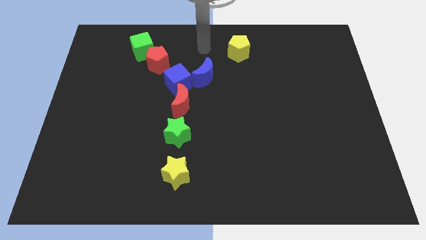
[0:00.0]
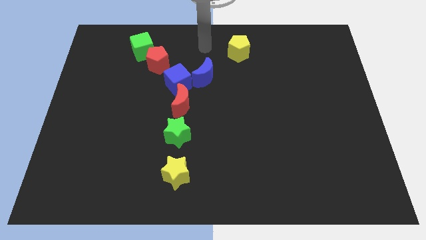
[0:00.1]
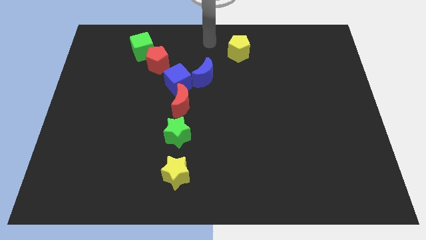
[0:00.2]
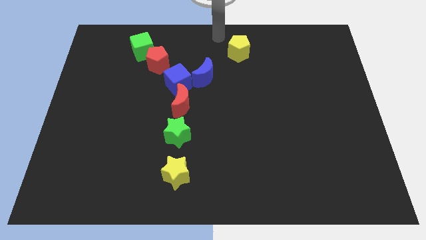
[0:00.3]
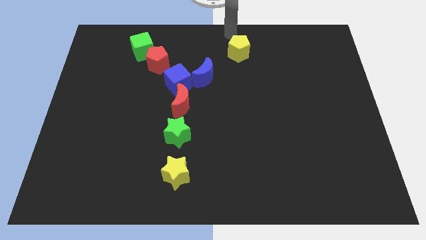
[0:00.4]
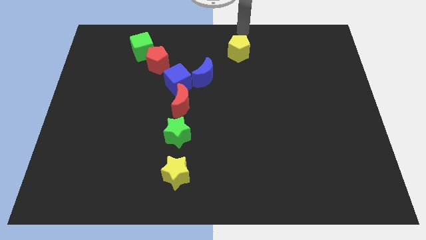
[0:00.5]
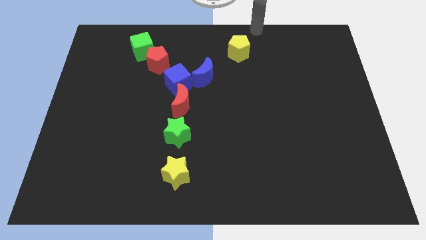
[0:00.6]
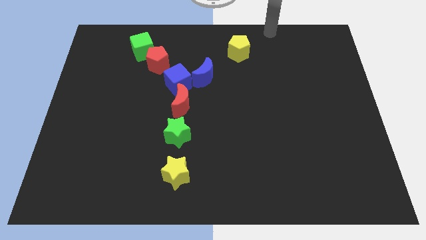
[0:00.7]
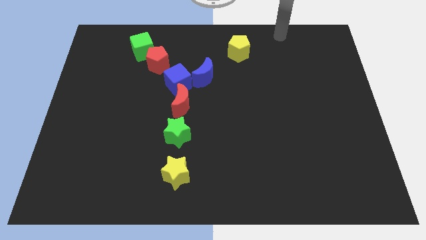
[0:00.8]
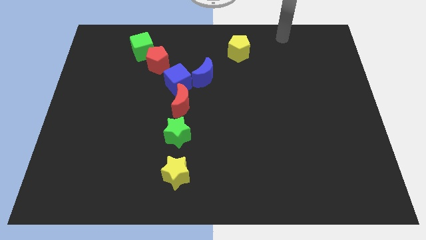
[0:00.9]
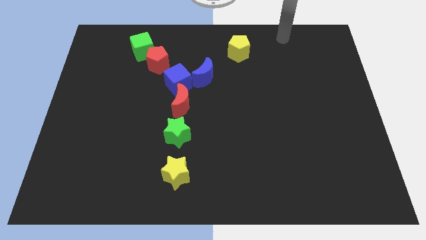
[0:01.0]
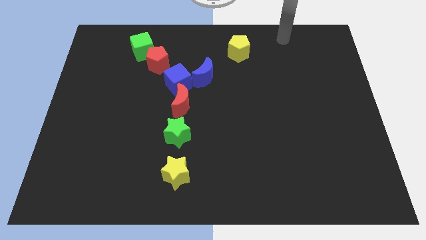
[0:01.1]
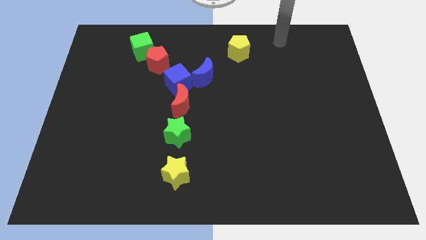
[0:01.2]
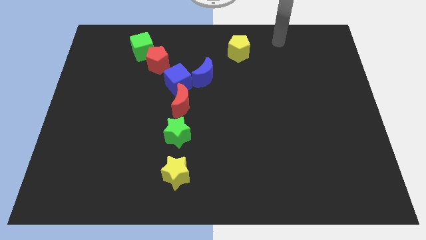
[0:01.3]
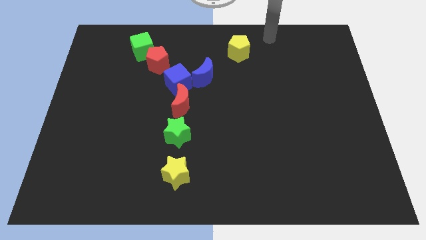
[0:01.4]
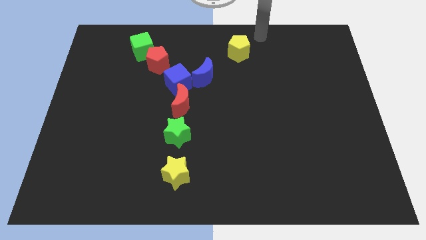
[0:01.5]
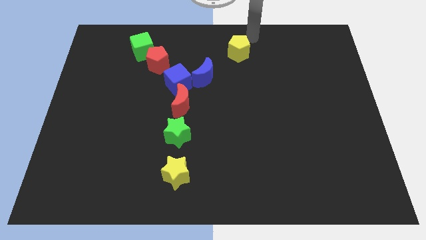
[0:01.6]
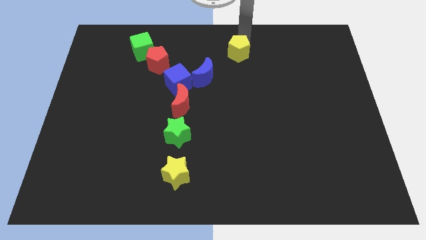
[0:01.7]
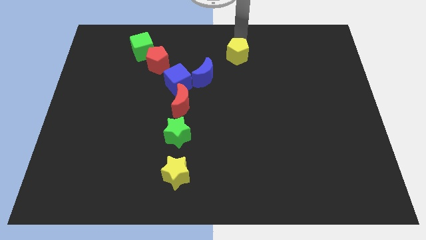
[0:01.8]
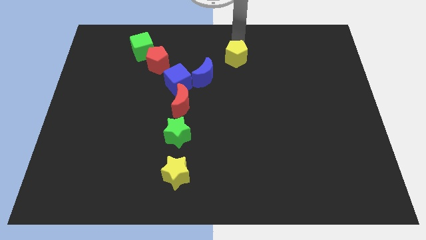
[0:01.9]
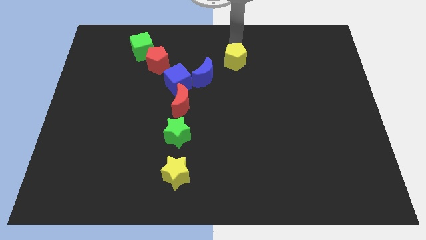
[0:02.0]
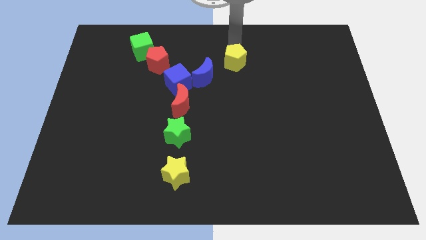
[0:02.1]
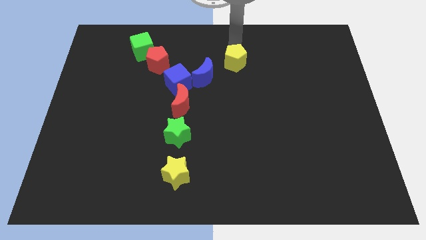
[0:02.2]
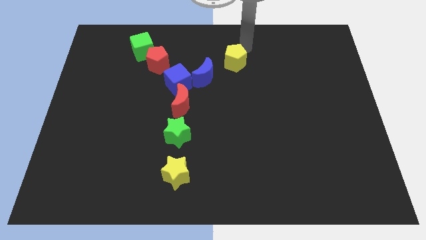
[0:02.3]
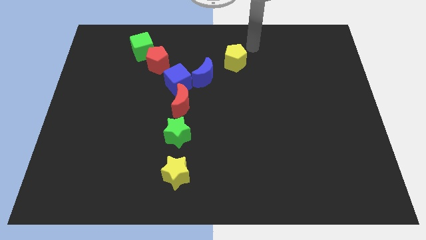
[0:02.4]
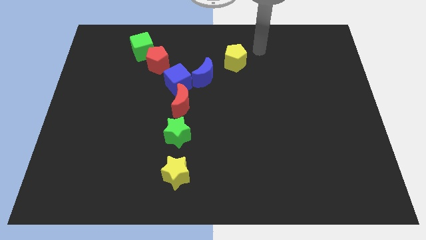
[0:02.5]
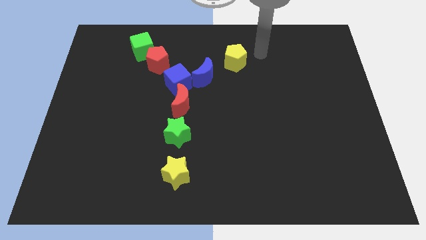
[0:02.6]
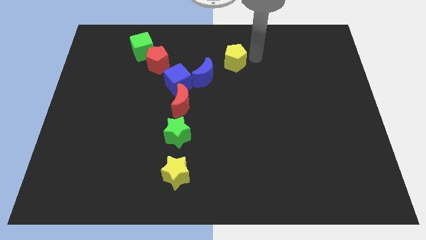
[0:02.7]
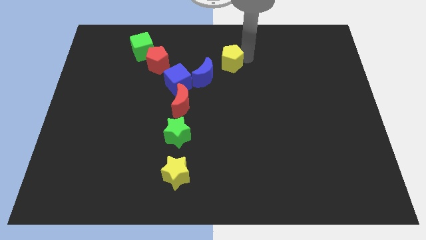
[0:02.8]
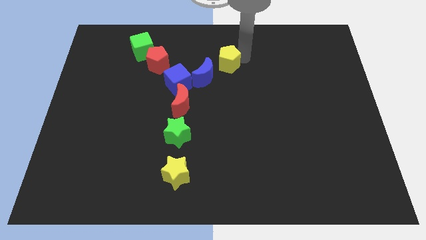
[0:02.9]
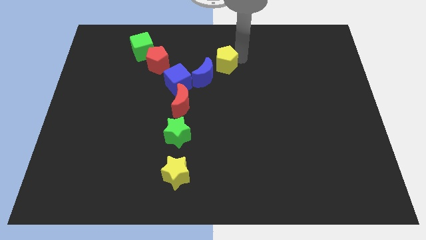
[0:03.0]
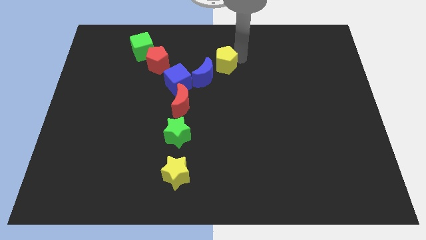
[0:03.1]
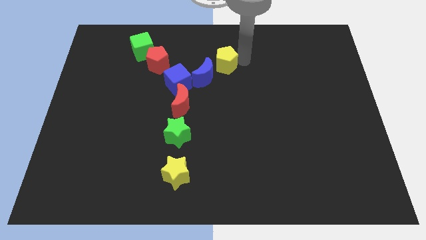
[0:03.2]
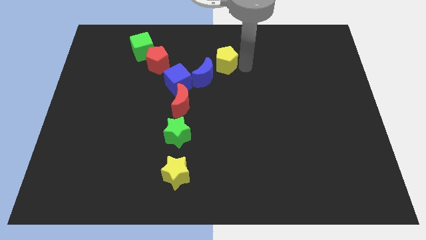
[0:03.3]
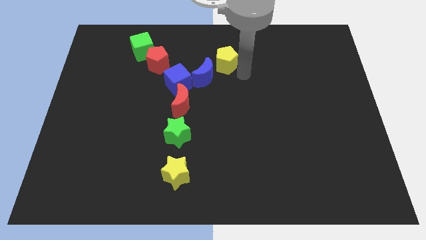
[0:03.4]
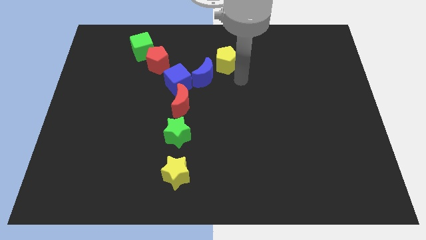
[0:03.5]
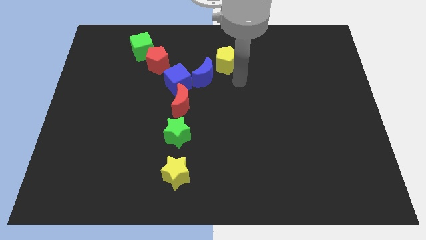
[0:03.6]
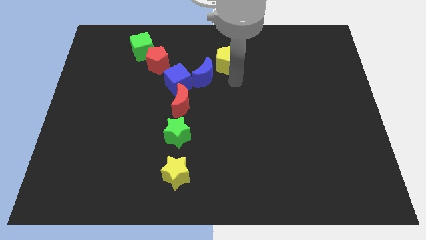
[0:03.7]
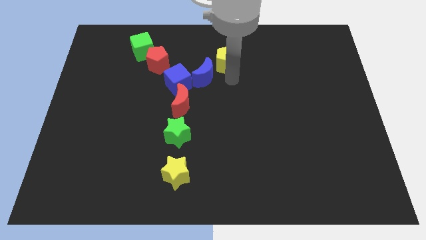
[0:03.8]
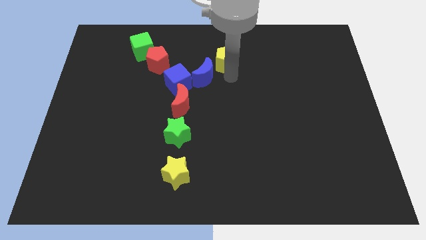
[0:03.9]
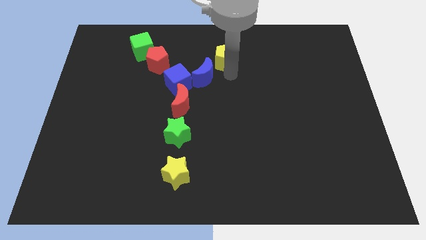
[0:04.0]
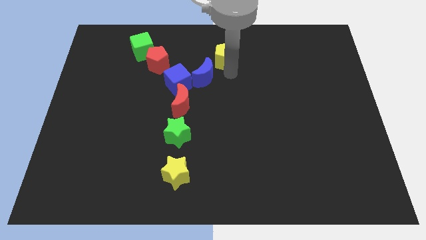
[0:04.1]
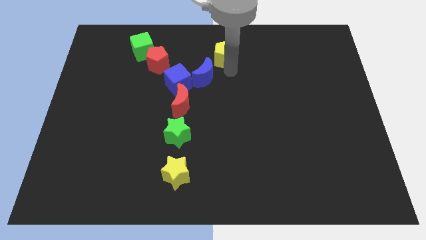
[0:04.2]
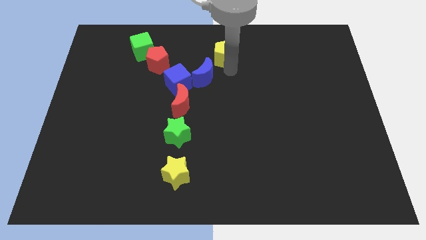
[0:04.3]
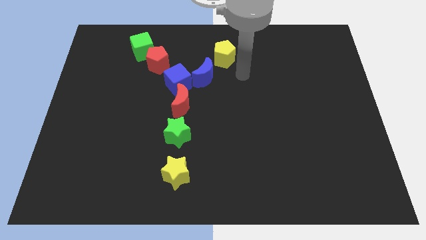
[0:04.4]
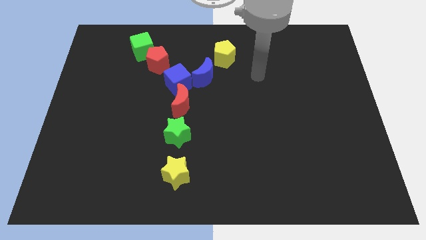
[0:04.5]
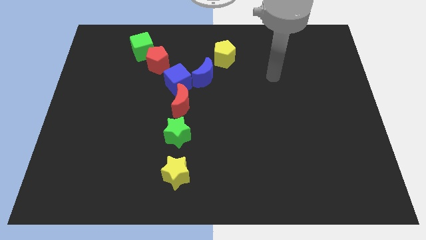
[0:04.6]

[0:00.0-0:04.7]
place yellow pentagon to the top right of blue moon

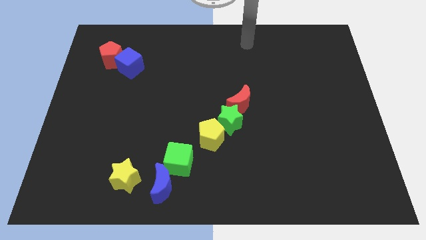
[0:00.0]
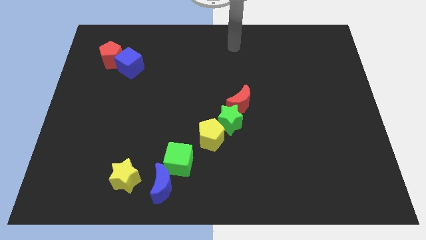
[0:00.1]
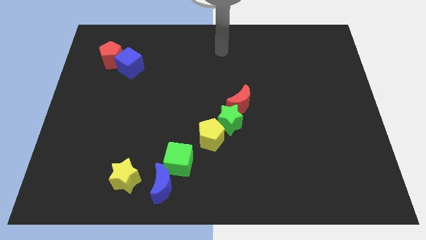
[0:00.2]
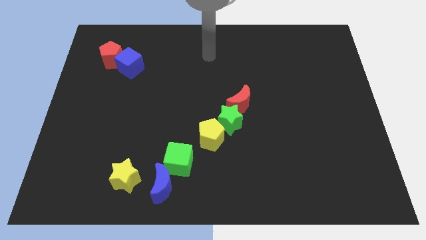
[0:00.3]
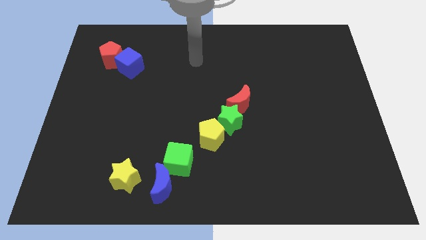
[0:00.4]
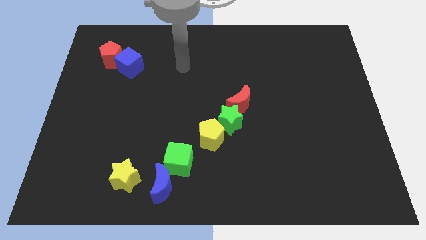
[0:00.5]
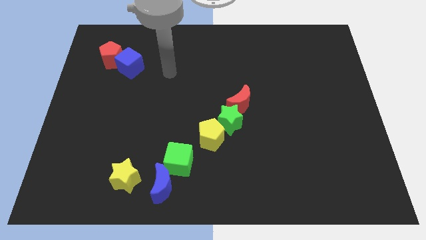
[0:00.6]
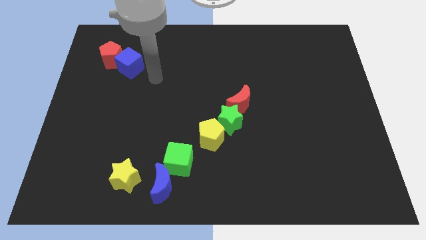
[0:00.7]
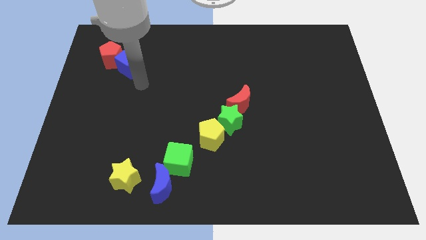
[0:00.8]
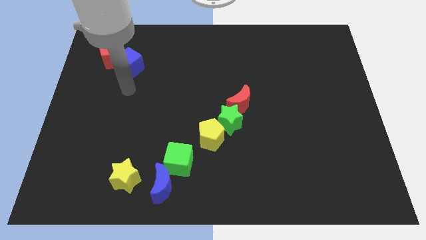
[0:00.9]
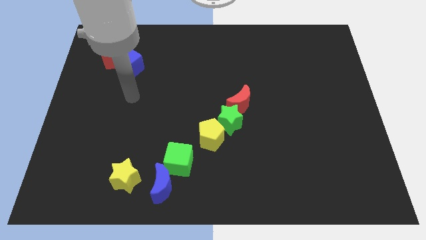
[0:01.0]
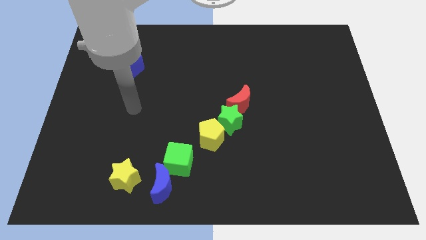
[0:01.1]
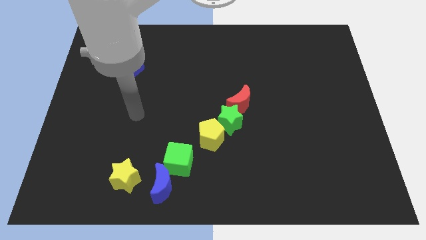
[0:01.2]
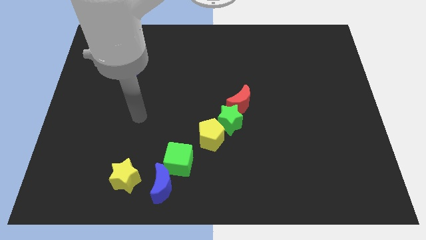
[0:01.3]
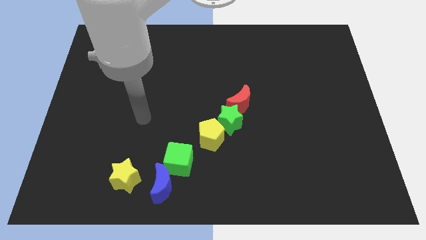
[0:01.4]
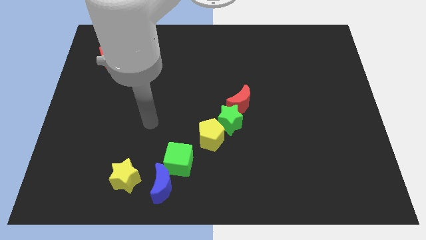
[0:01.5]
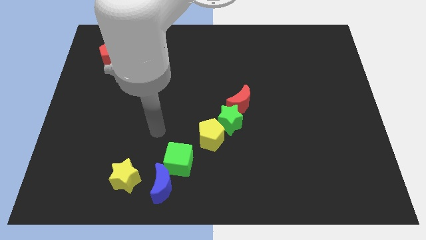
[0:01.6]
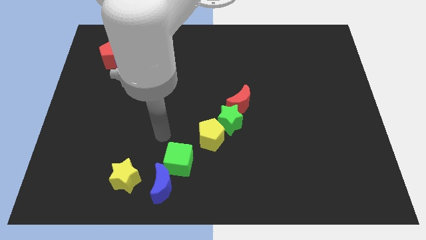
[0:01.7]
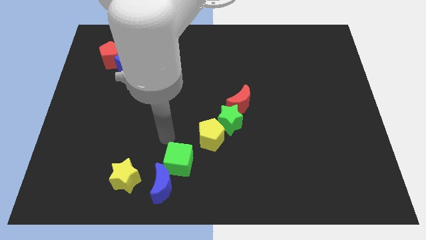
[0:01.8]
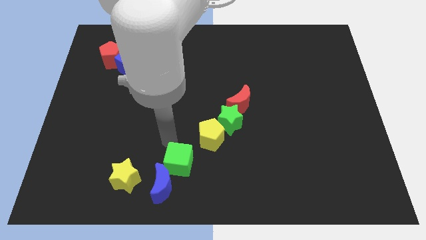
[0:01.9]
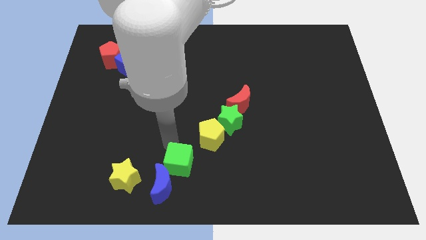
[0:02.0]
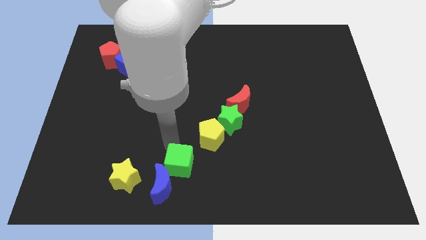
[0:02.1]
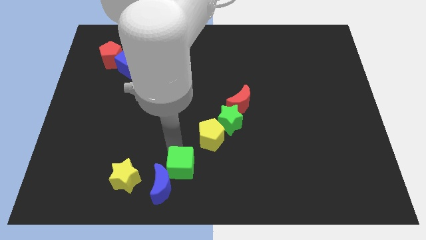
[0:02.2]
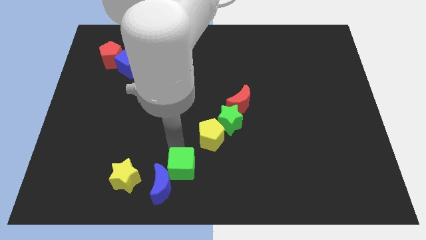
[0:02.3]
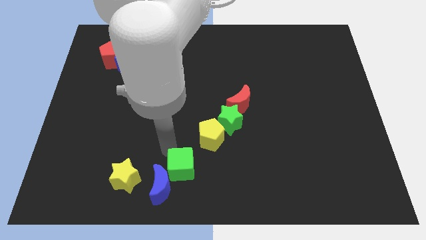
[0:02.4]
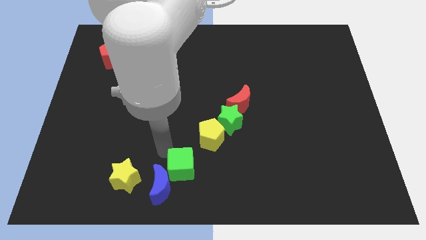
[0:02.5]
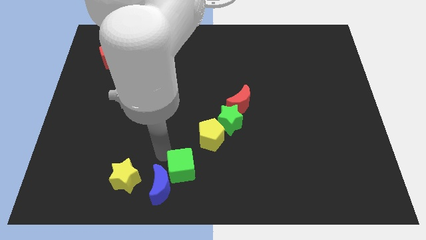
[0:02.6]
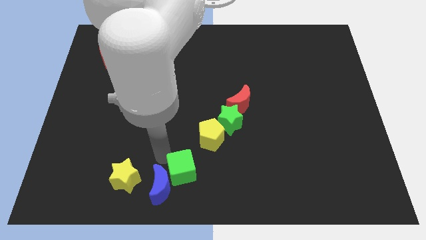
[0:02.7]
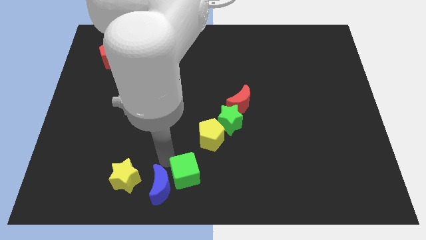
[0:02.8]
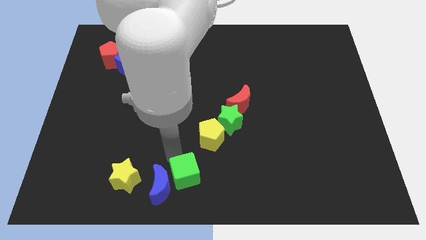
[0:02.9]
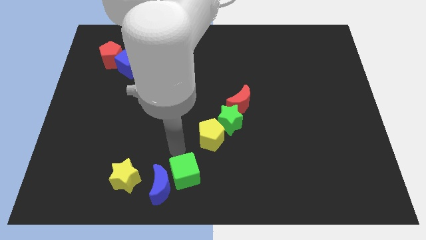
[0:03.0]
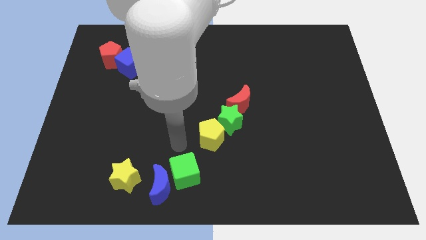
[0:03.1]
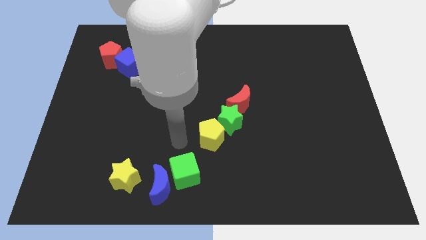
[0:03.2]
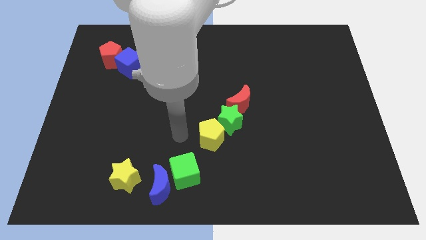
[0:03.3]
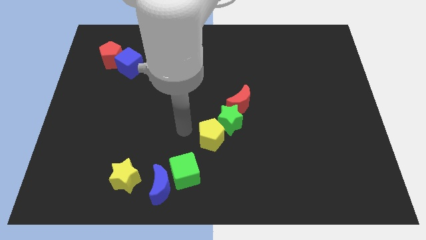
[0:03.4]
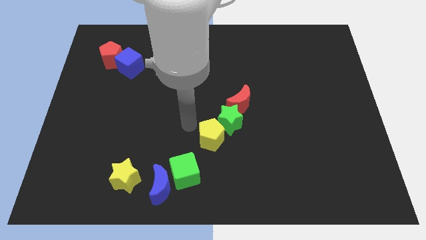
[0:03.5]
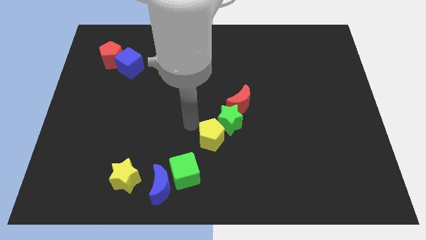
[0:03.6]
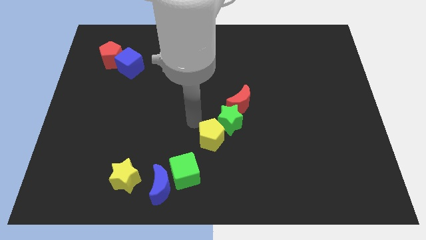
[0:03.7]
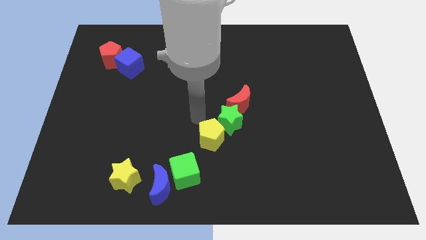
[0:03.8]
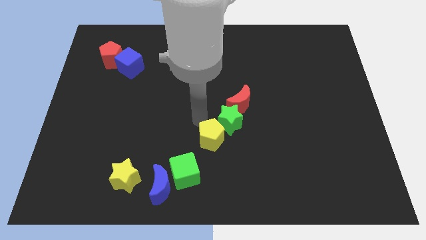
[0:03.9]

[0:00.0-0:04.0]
push the green cube slightly to the bottom

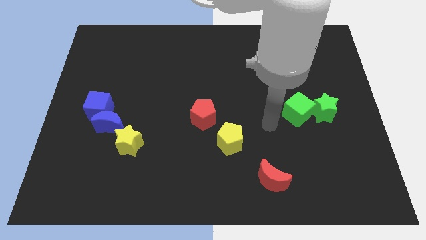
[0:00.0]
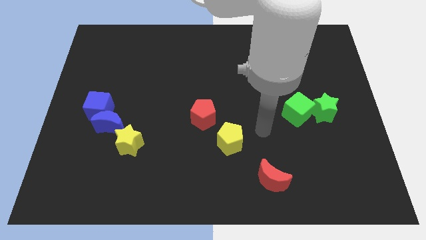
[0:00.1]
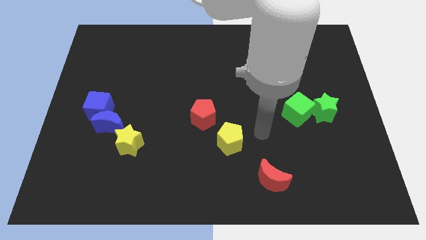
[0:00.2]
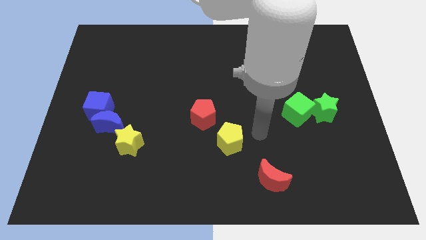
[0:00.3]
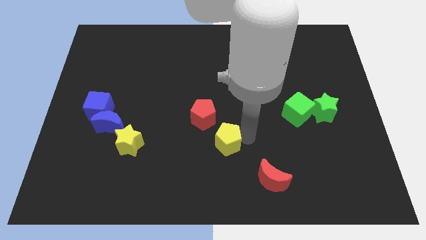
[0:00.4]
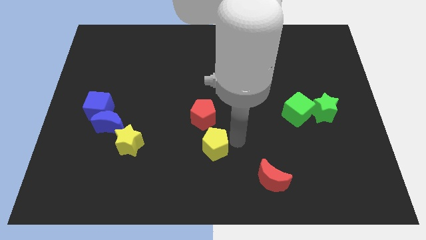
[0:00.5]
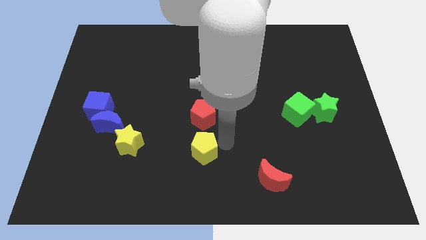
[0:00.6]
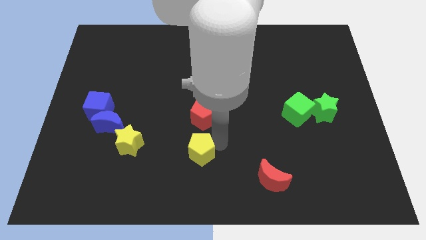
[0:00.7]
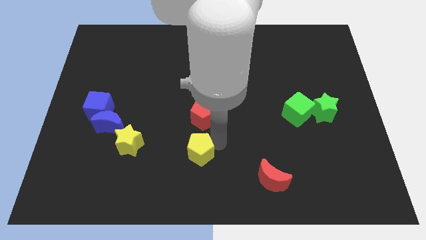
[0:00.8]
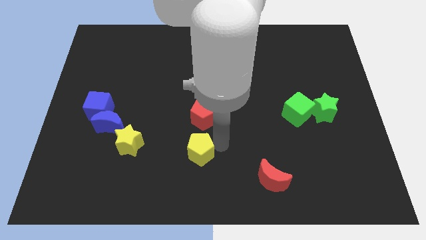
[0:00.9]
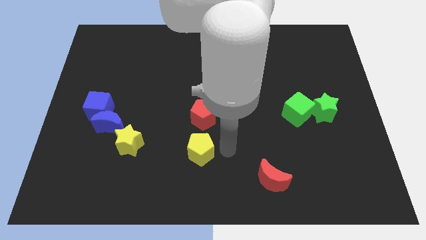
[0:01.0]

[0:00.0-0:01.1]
place yellow pentagon to the bottom of the red pentagon
